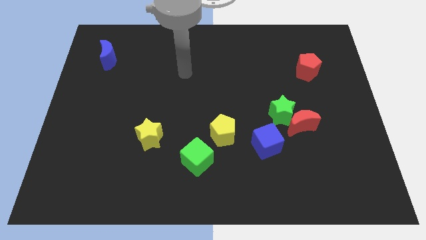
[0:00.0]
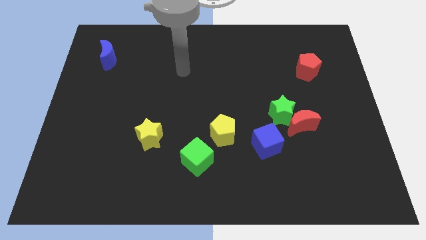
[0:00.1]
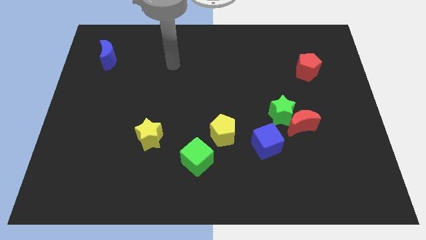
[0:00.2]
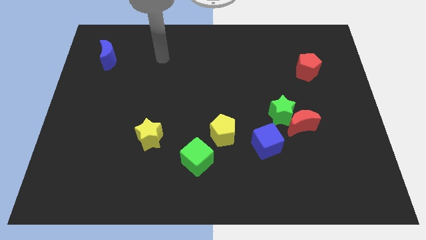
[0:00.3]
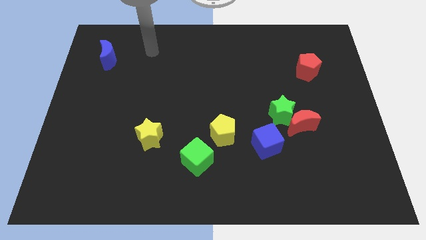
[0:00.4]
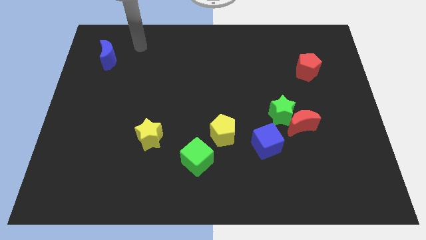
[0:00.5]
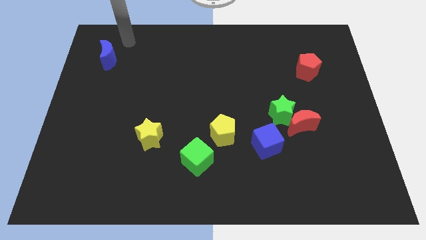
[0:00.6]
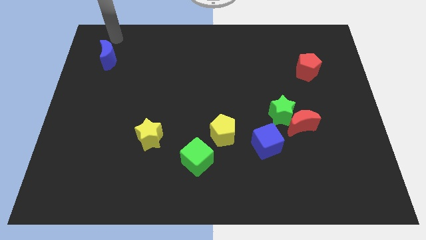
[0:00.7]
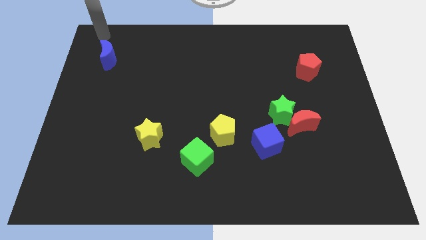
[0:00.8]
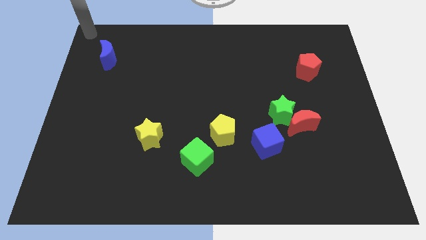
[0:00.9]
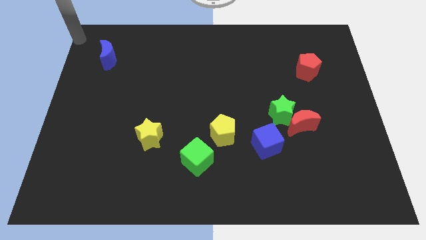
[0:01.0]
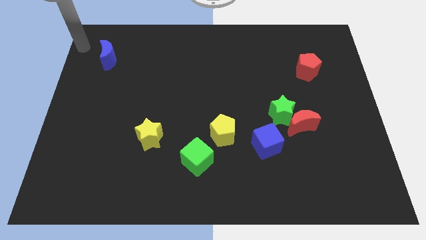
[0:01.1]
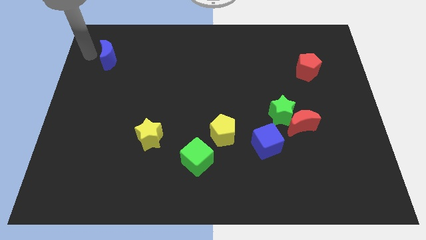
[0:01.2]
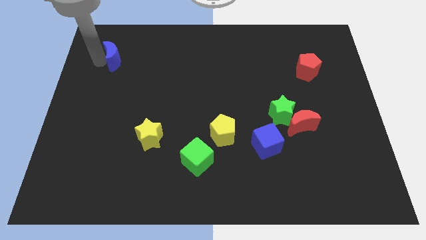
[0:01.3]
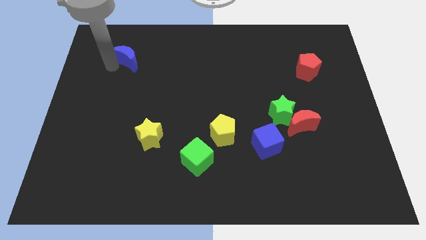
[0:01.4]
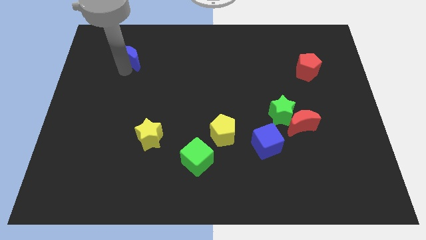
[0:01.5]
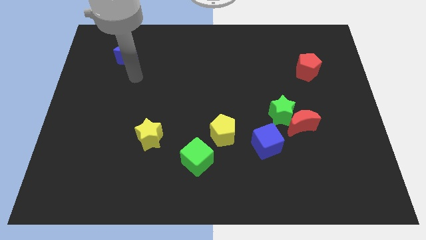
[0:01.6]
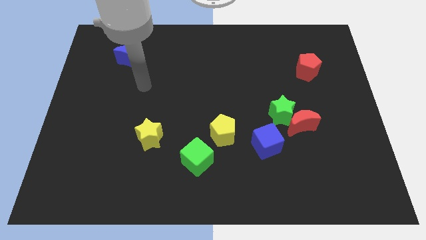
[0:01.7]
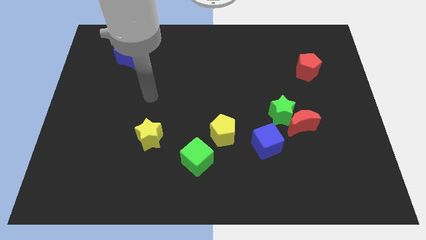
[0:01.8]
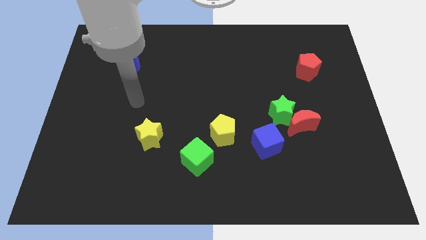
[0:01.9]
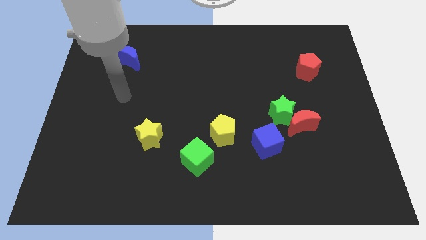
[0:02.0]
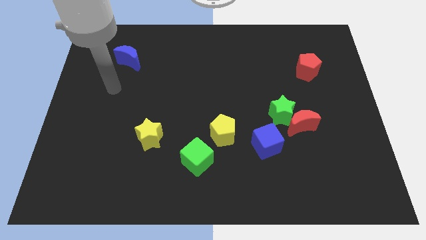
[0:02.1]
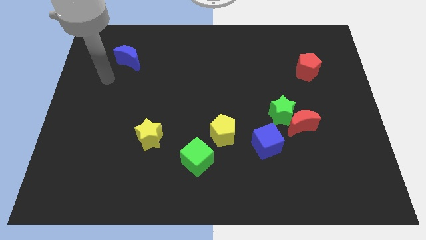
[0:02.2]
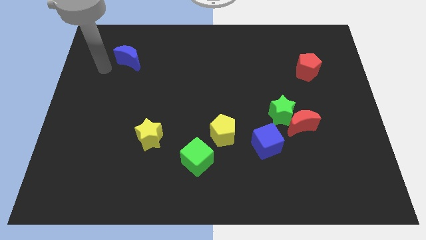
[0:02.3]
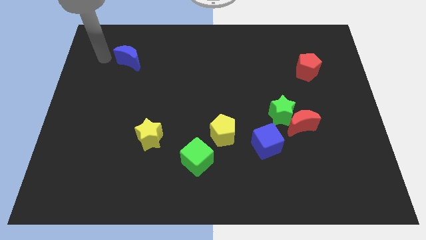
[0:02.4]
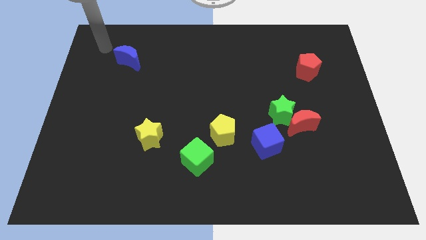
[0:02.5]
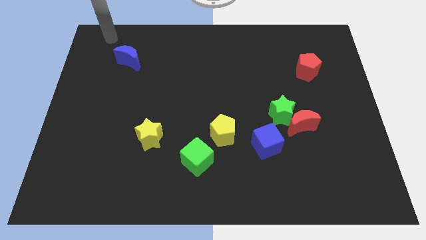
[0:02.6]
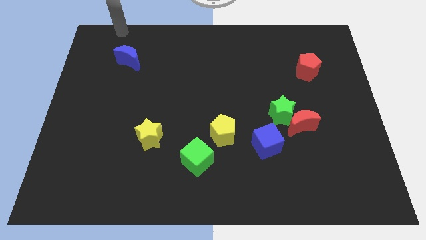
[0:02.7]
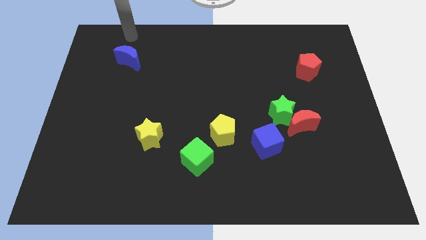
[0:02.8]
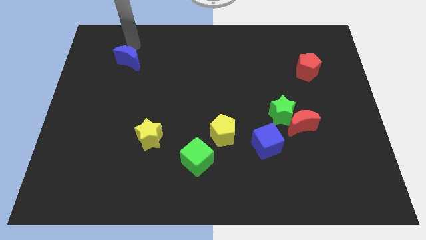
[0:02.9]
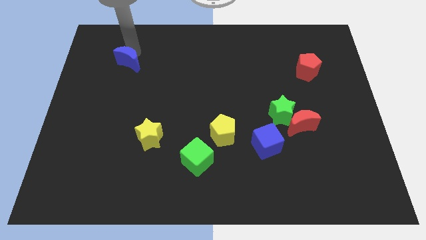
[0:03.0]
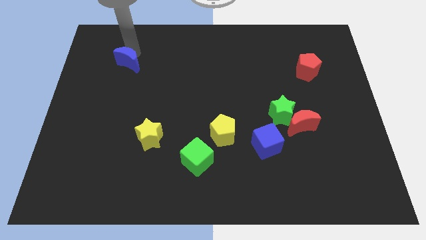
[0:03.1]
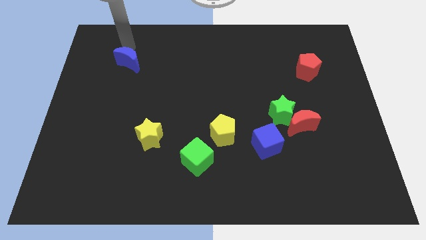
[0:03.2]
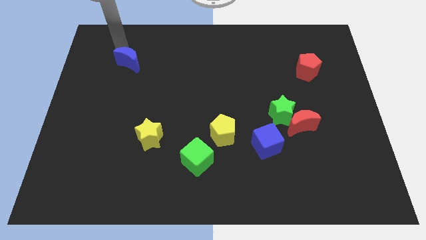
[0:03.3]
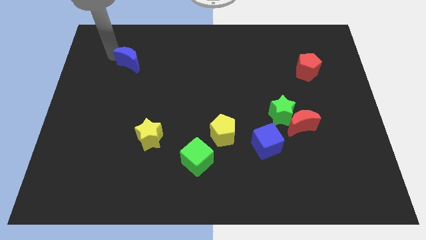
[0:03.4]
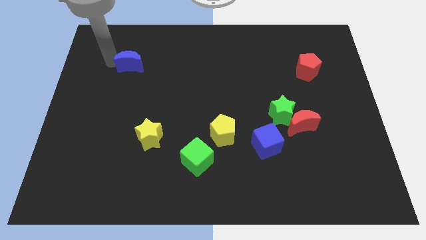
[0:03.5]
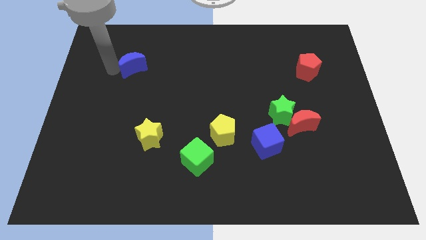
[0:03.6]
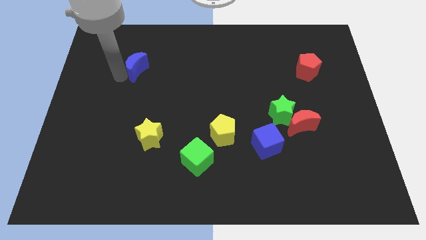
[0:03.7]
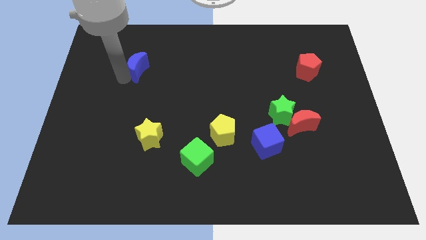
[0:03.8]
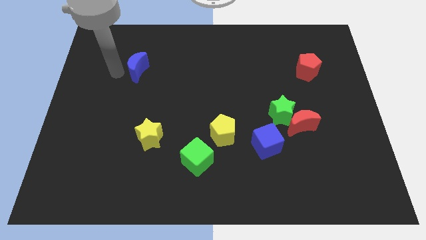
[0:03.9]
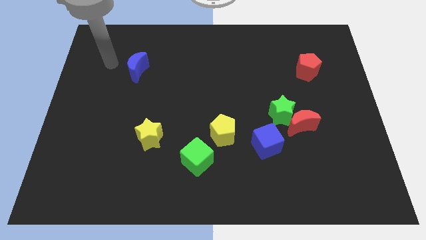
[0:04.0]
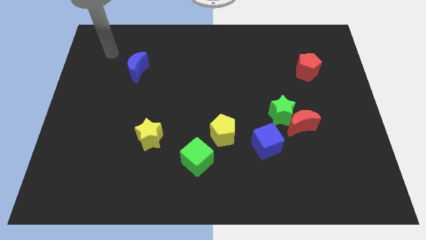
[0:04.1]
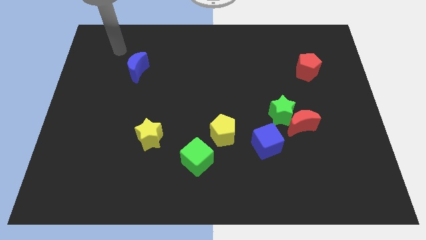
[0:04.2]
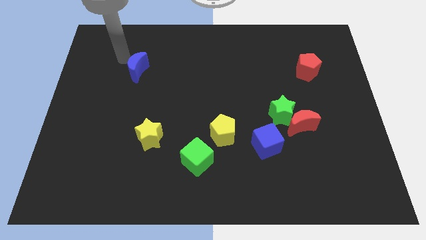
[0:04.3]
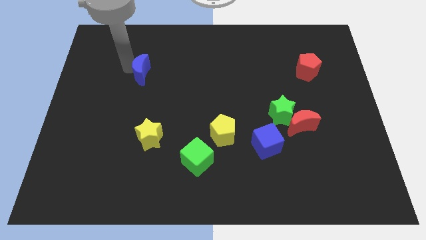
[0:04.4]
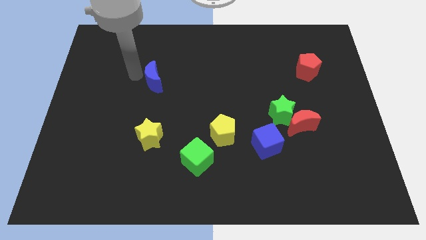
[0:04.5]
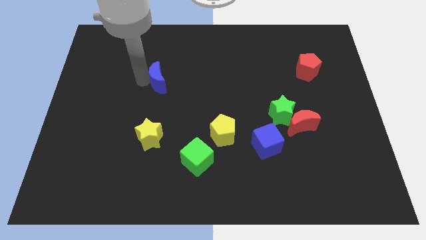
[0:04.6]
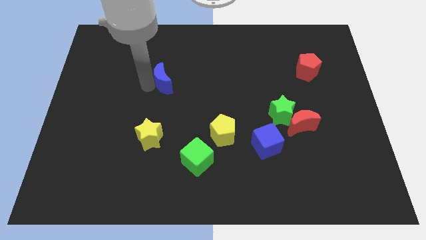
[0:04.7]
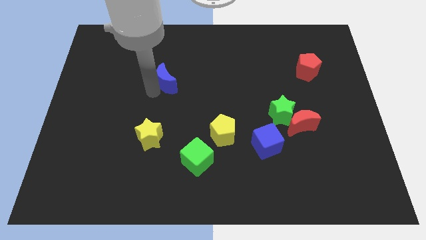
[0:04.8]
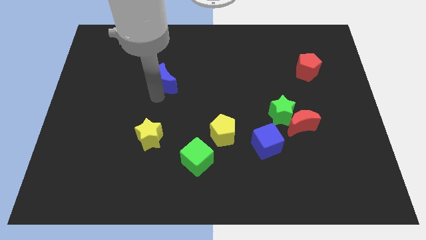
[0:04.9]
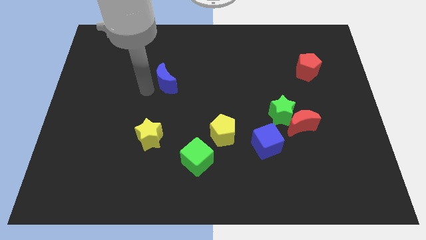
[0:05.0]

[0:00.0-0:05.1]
push the blue crescent towards the center of the board

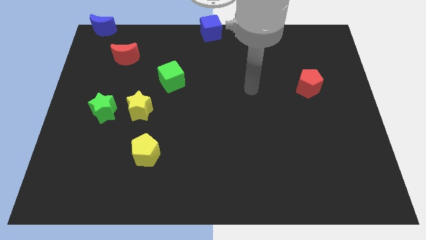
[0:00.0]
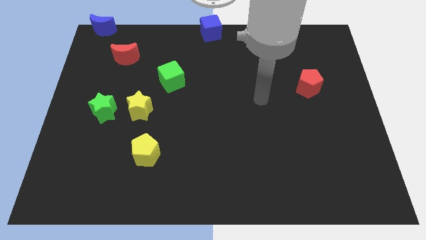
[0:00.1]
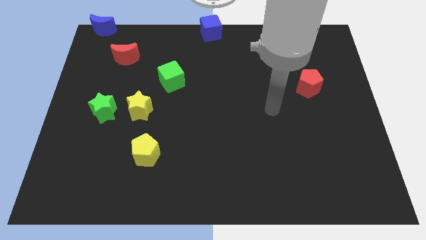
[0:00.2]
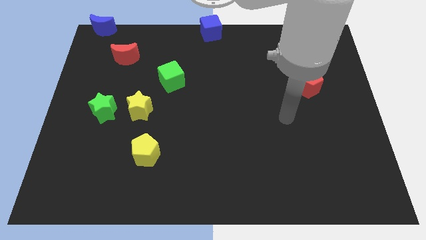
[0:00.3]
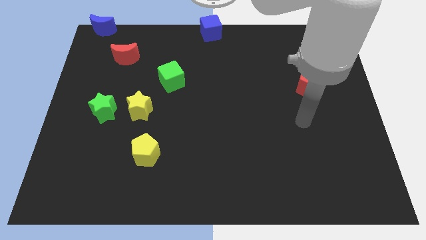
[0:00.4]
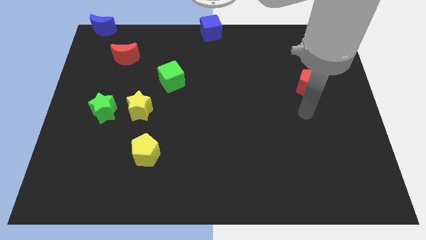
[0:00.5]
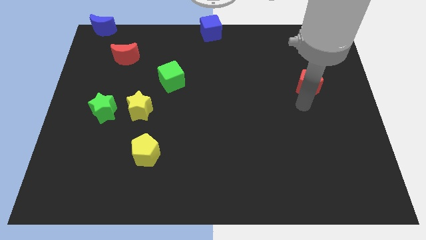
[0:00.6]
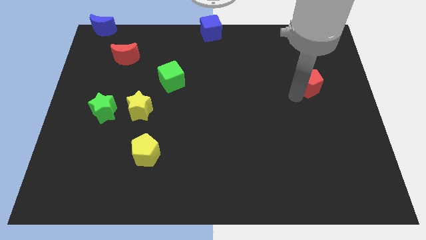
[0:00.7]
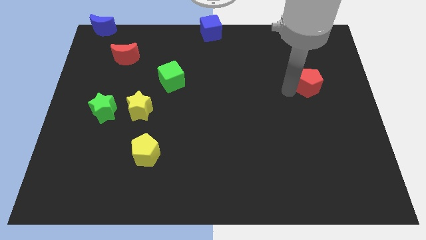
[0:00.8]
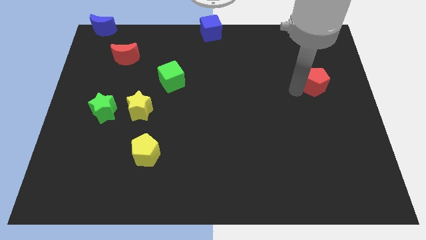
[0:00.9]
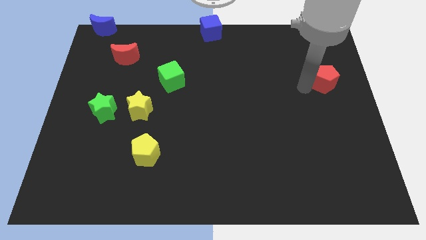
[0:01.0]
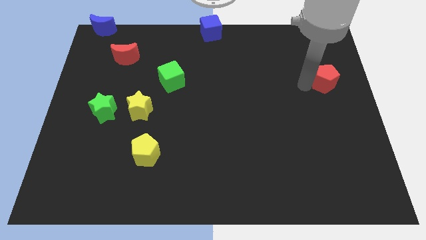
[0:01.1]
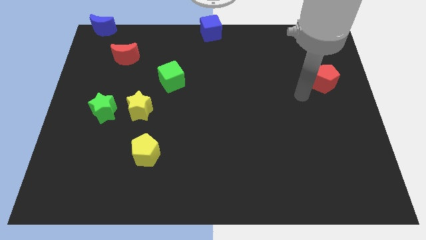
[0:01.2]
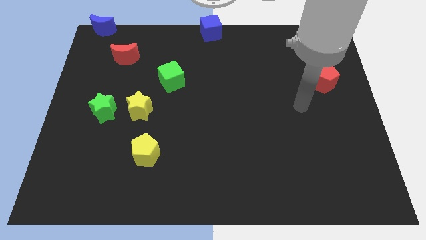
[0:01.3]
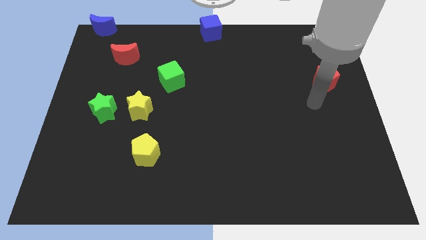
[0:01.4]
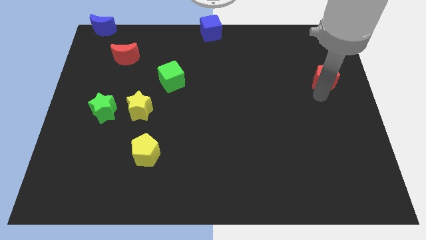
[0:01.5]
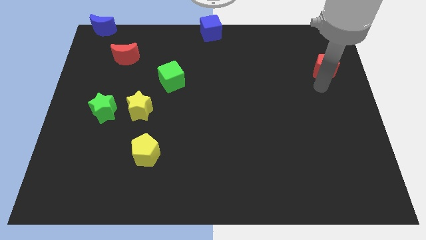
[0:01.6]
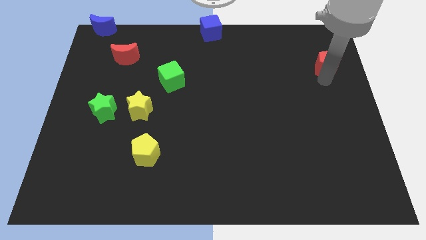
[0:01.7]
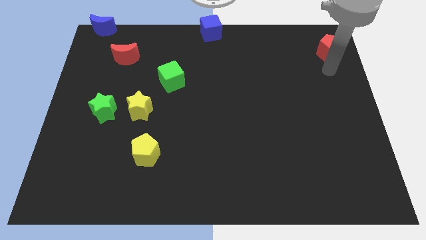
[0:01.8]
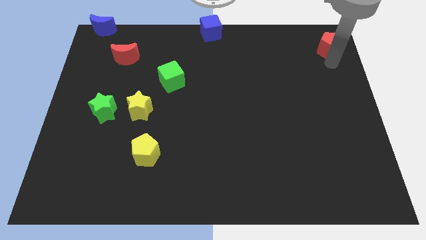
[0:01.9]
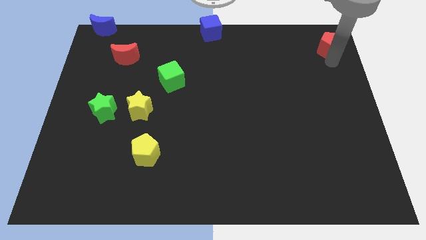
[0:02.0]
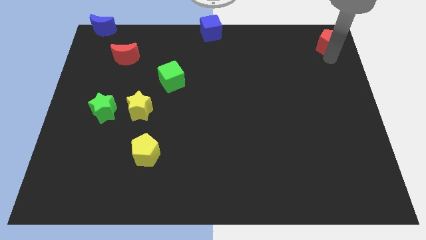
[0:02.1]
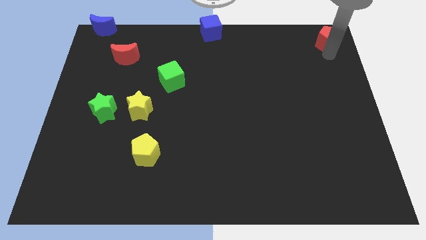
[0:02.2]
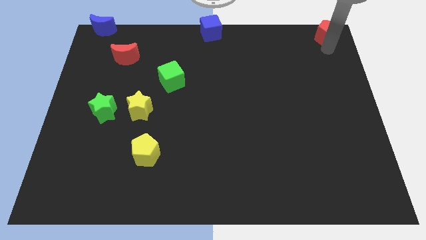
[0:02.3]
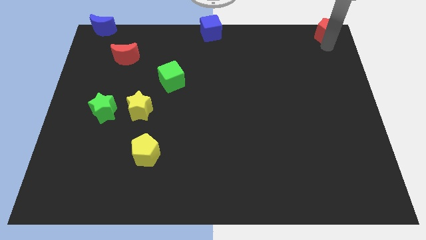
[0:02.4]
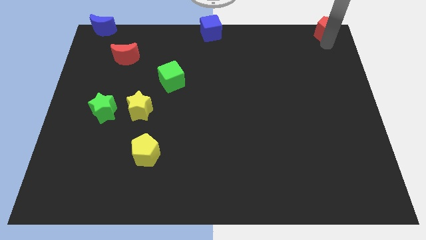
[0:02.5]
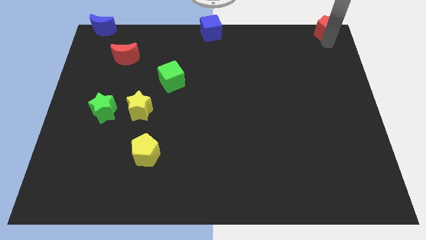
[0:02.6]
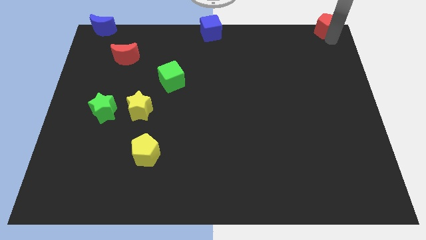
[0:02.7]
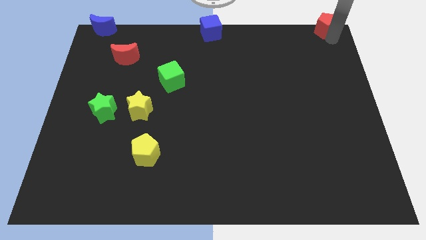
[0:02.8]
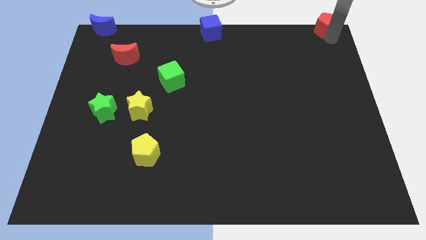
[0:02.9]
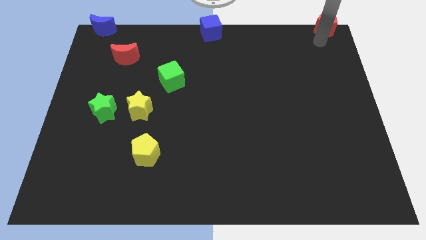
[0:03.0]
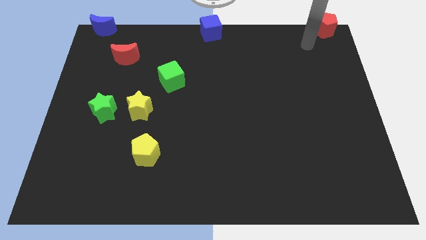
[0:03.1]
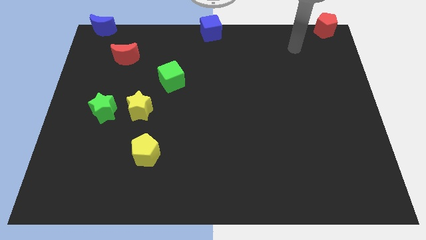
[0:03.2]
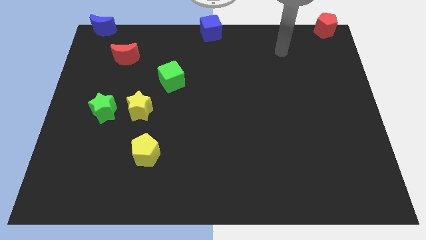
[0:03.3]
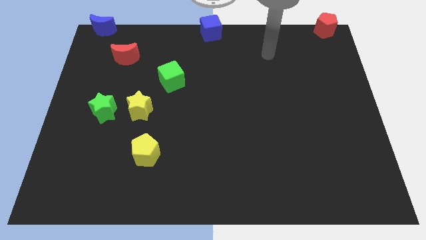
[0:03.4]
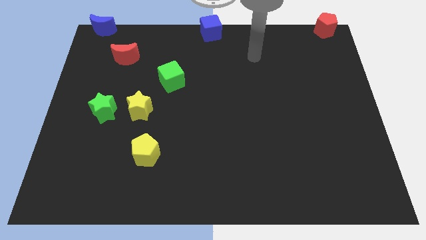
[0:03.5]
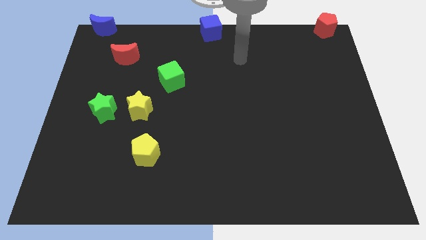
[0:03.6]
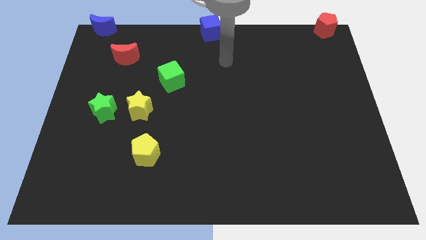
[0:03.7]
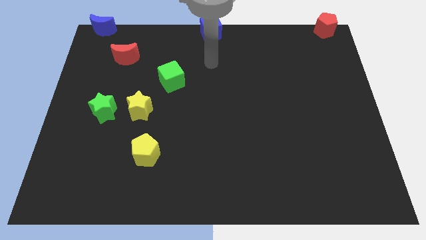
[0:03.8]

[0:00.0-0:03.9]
move the red pentagon to the top right
